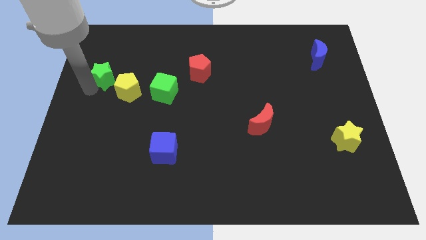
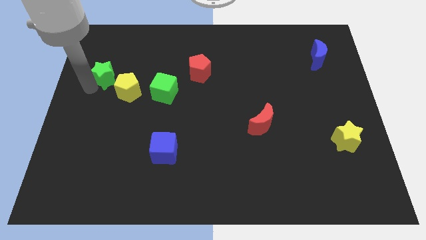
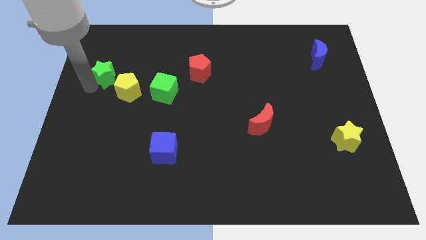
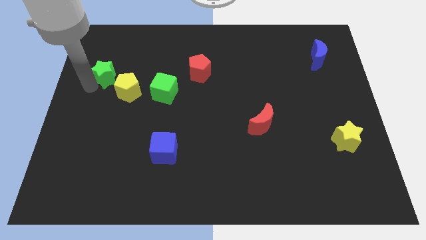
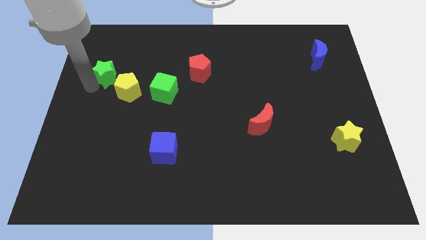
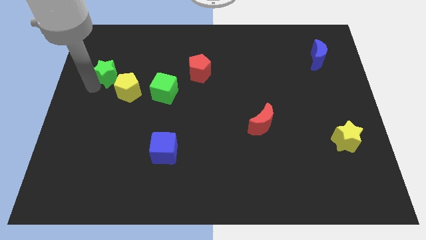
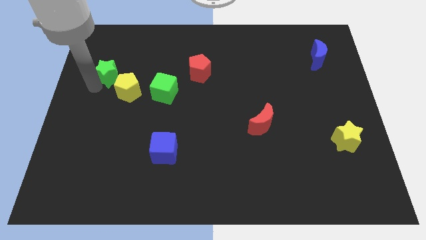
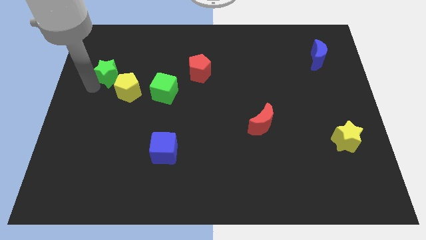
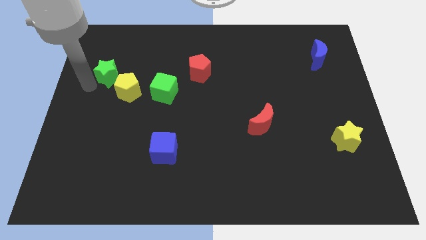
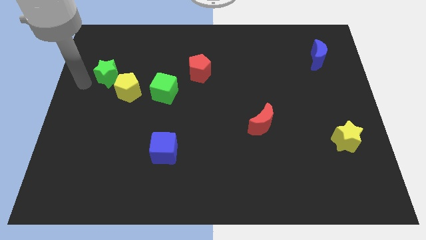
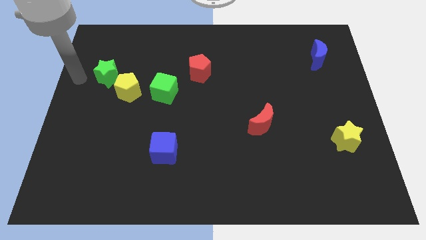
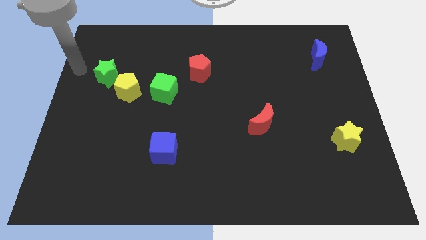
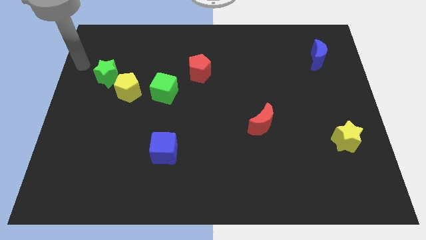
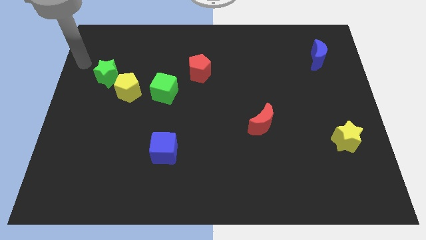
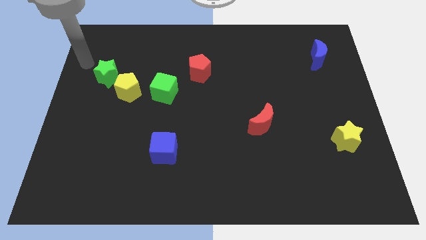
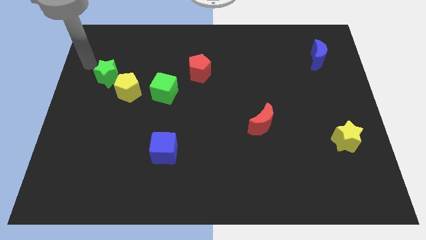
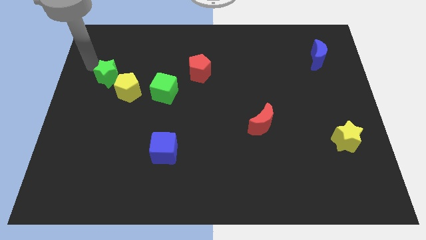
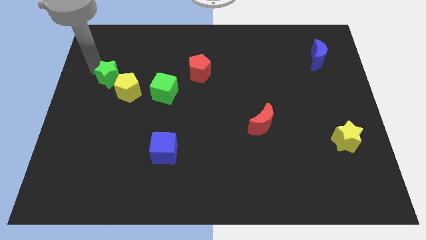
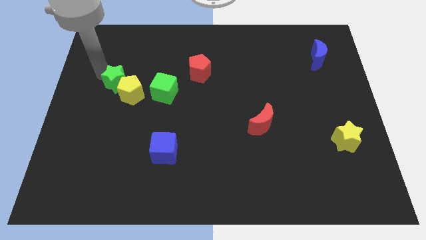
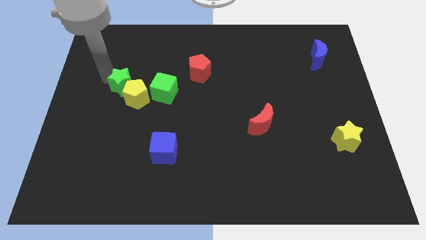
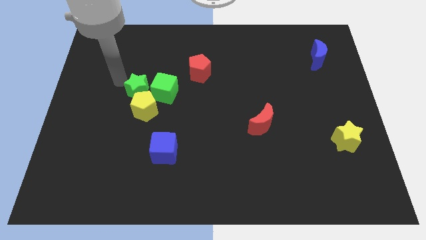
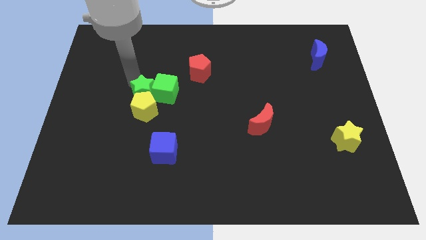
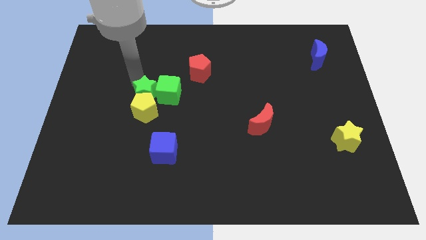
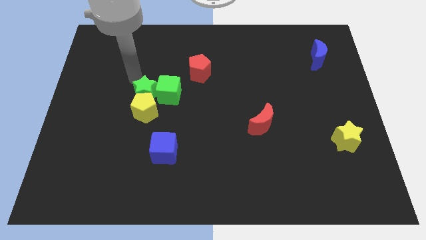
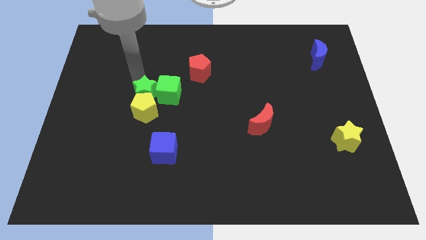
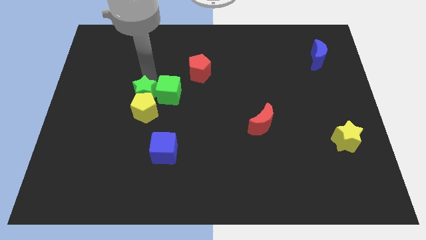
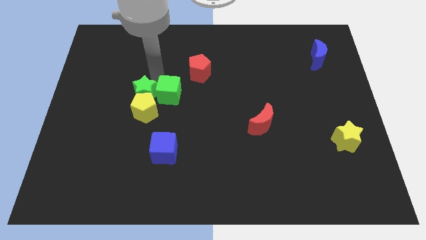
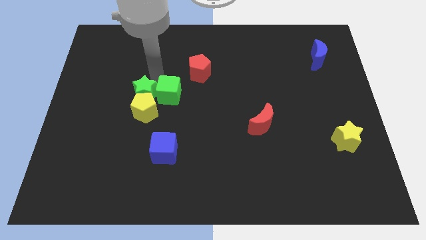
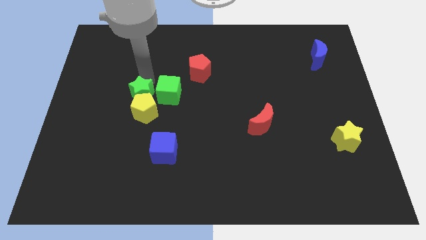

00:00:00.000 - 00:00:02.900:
push the green star to the left side of the green cube

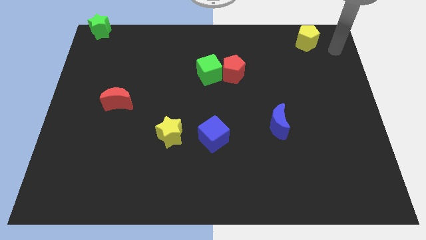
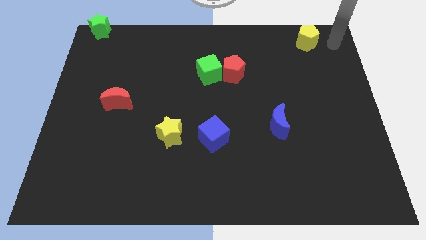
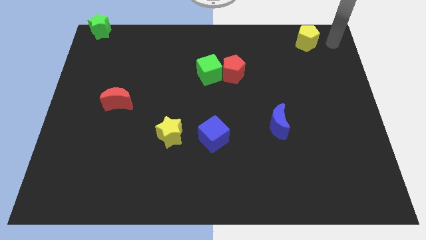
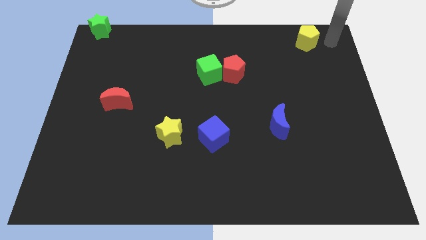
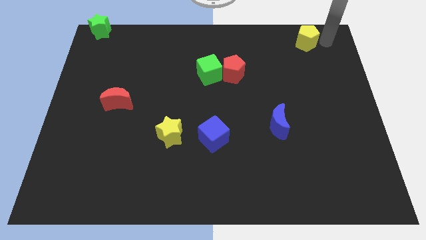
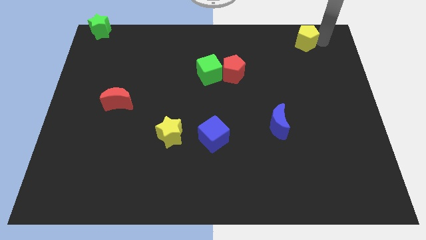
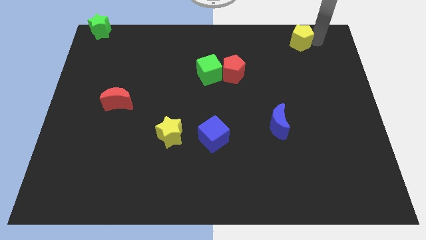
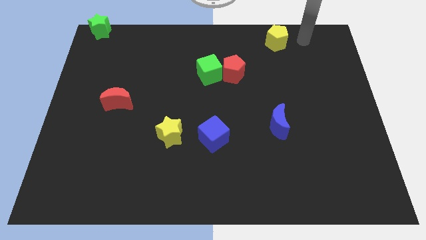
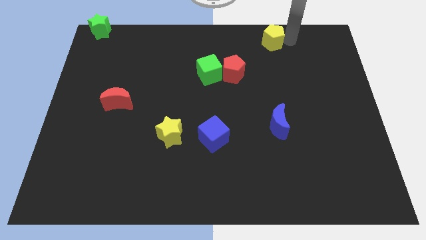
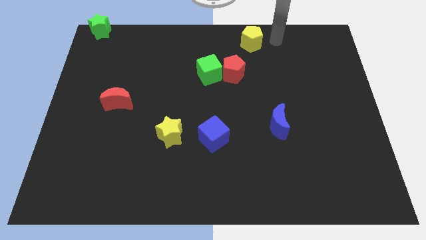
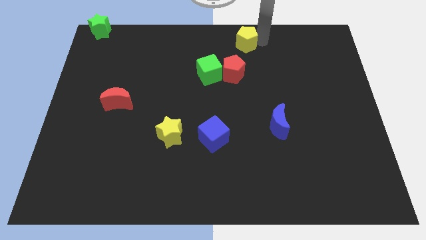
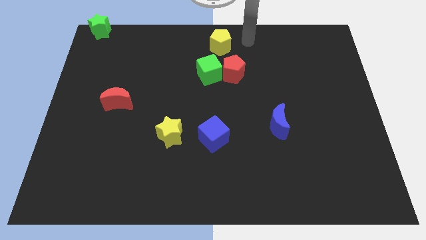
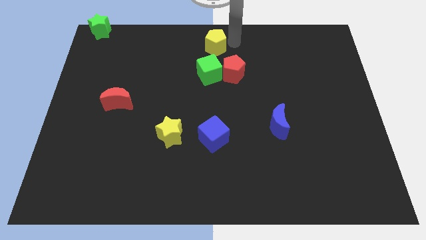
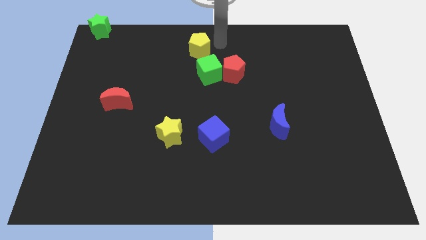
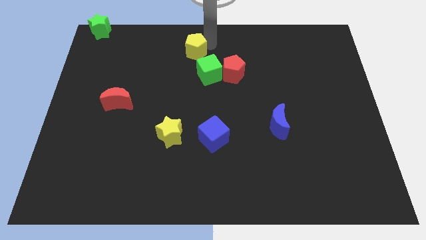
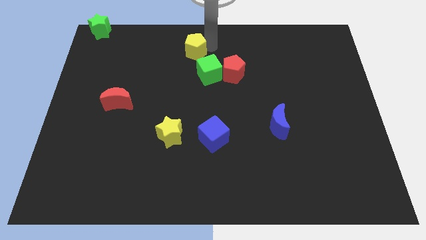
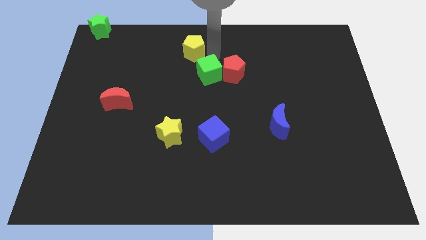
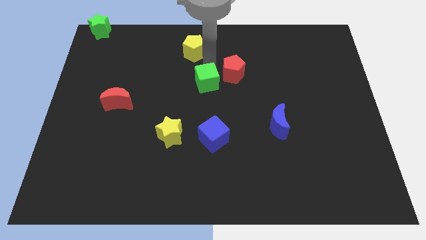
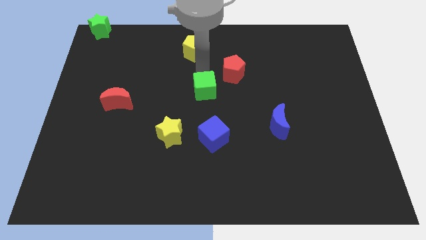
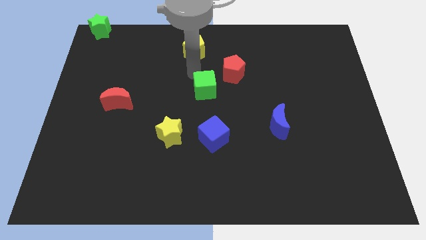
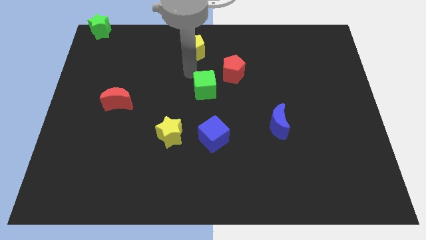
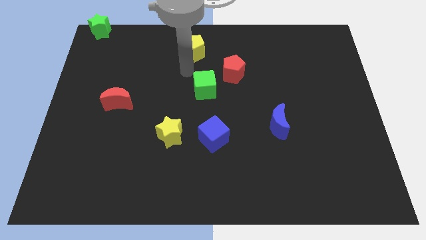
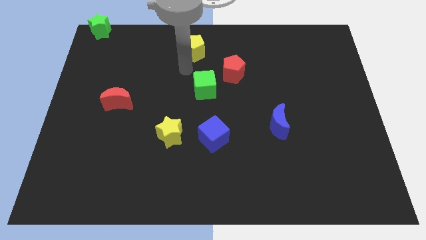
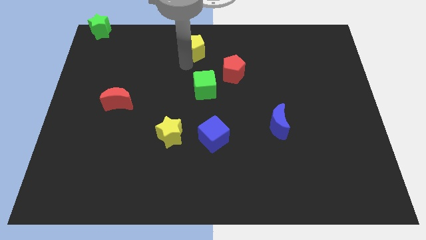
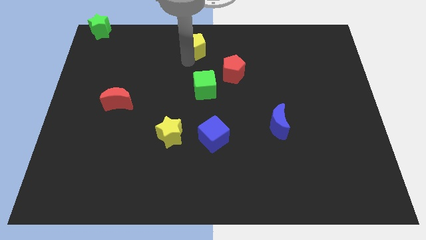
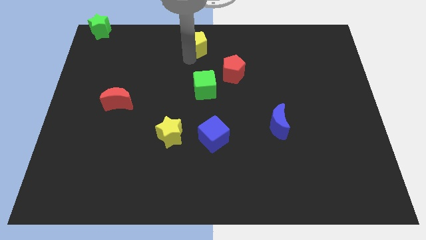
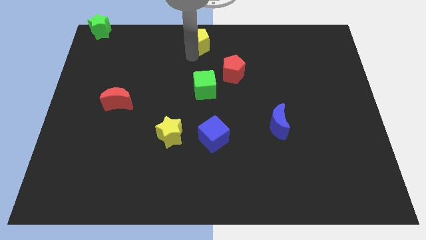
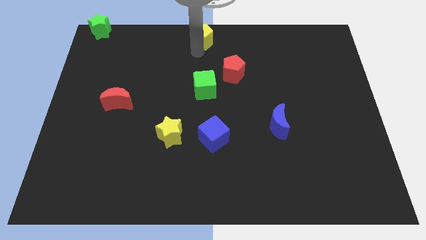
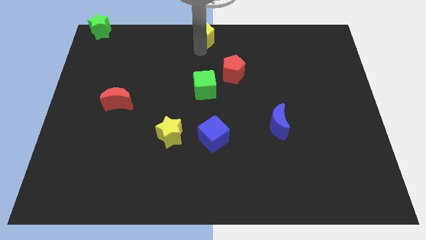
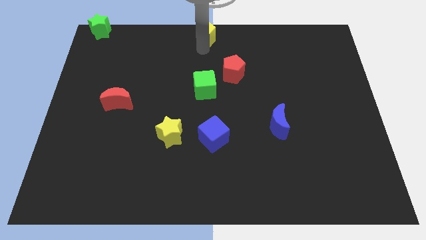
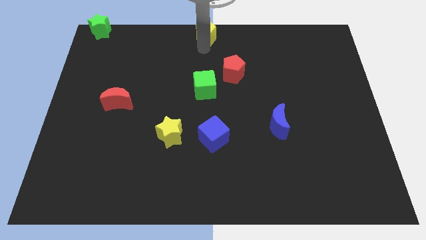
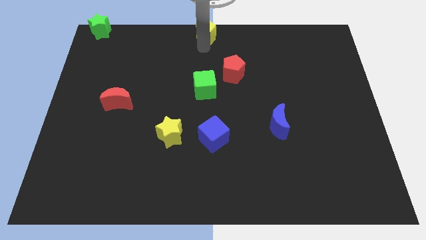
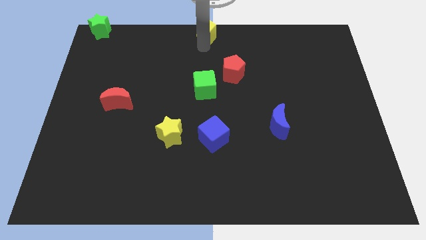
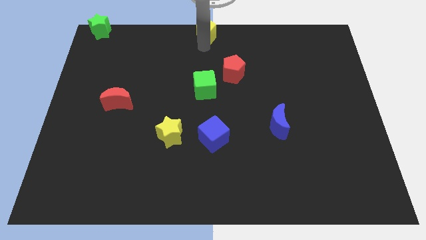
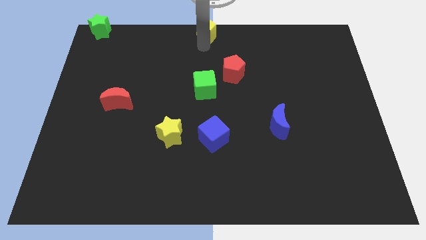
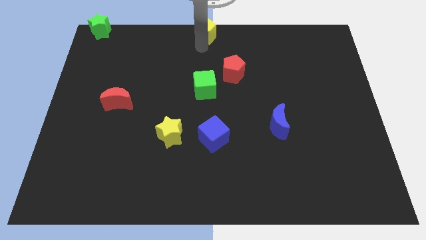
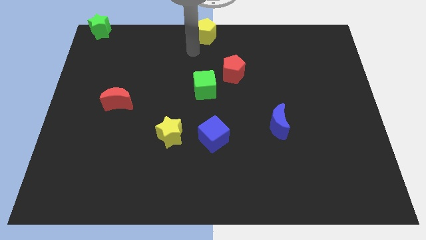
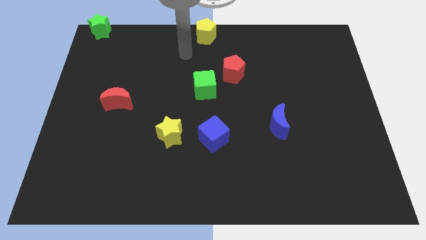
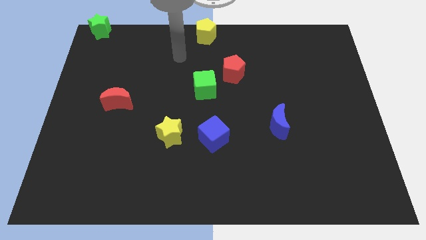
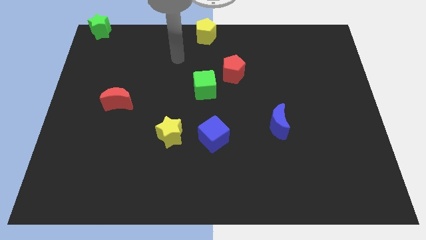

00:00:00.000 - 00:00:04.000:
push yellow pentagon to the top center of the board

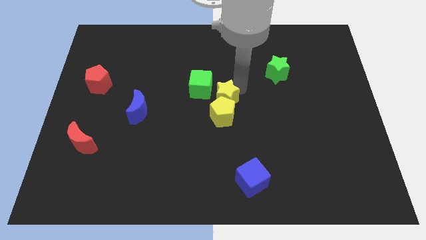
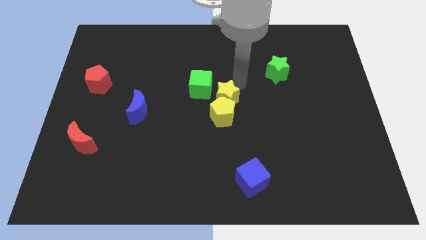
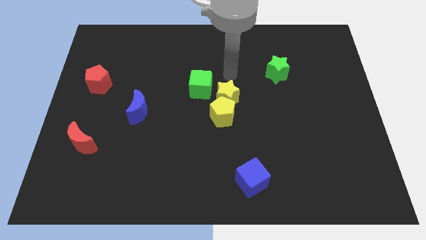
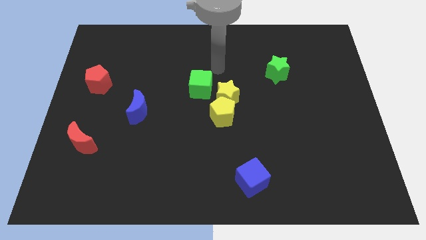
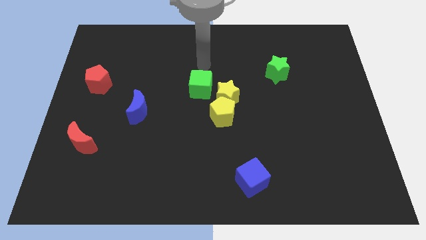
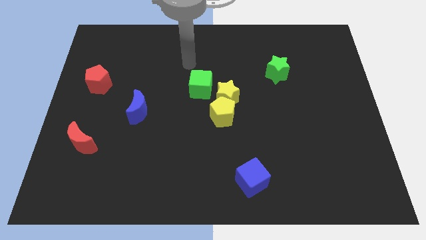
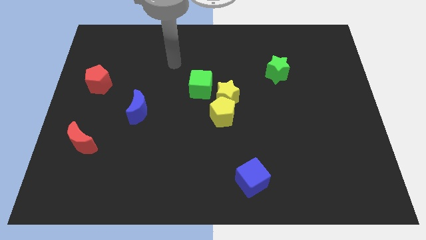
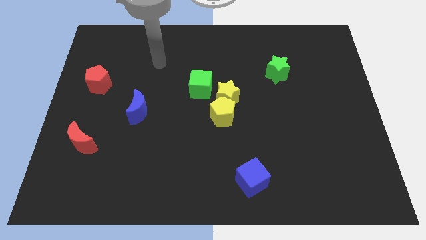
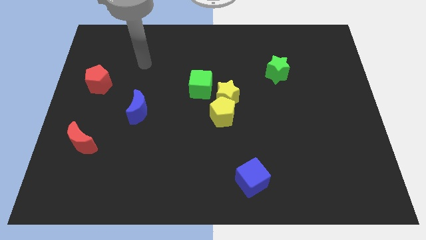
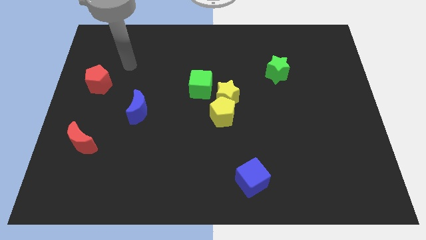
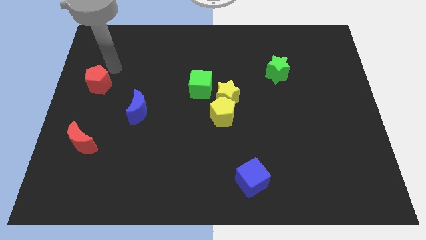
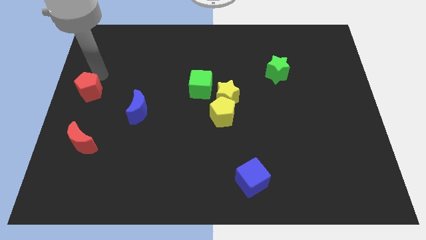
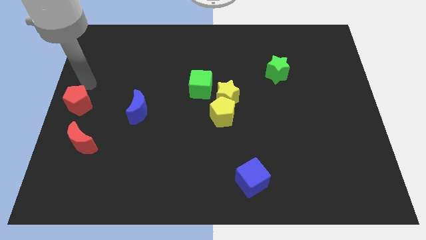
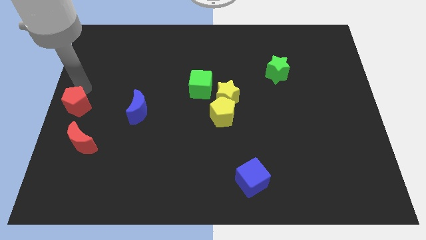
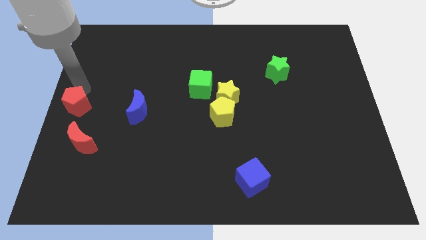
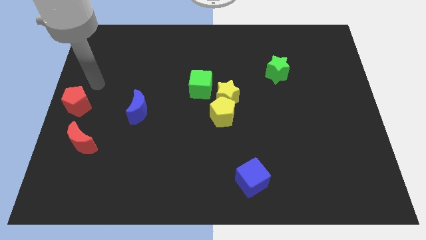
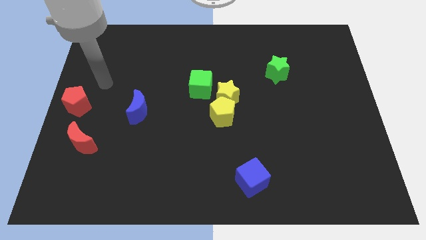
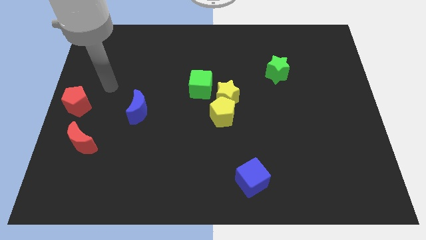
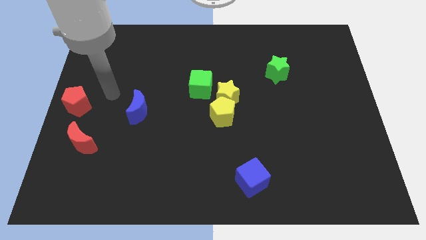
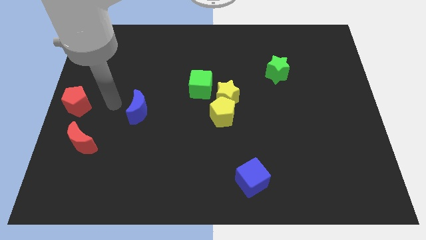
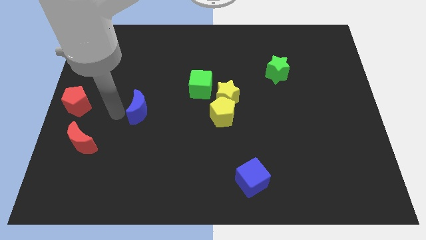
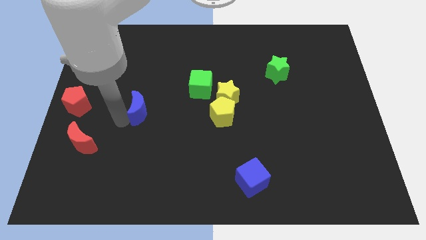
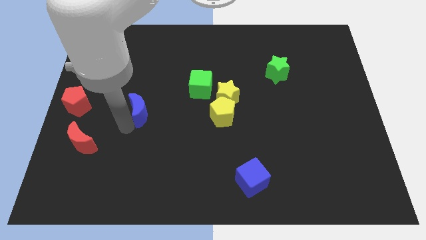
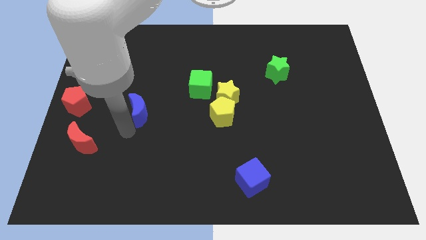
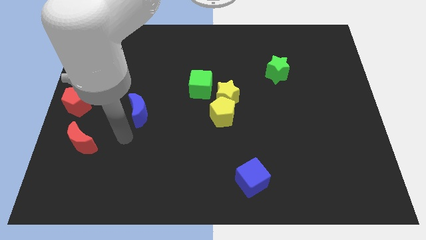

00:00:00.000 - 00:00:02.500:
go and push the red pentagon to the down
